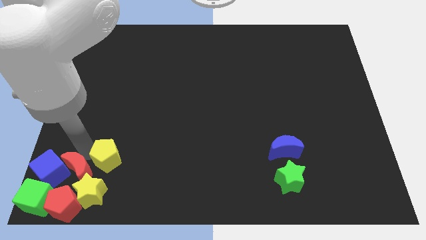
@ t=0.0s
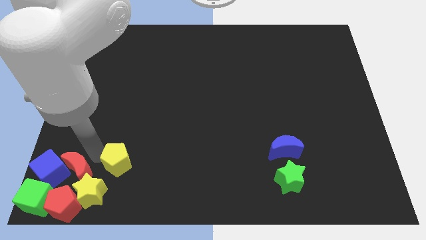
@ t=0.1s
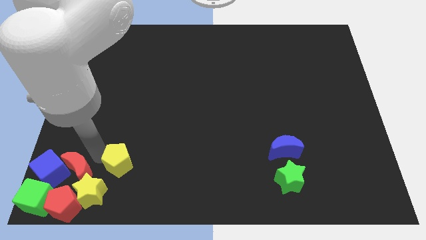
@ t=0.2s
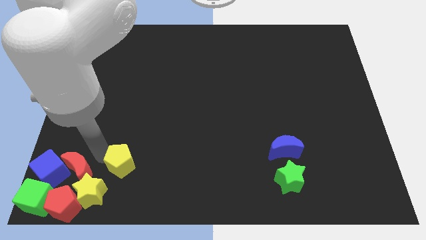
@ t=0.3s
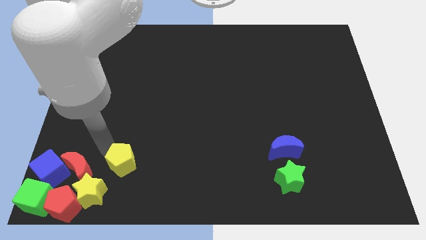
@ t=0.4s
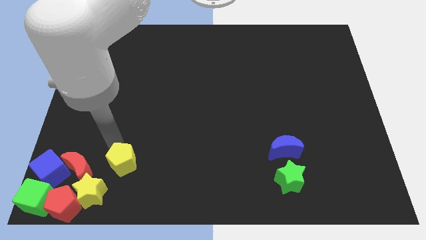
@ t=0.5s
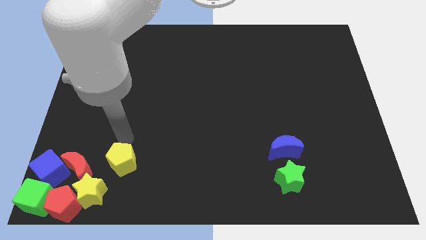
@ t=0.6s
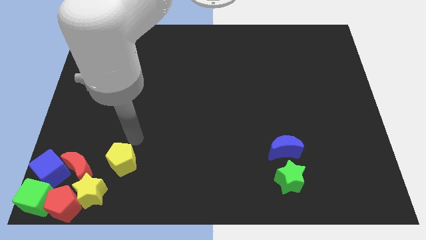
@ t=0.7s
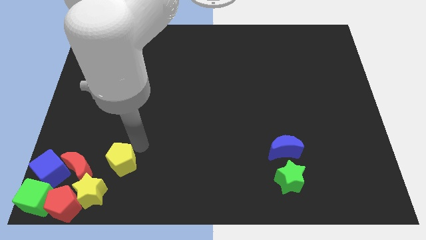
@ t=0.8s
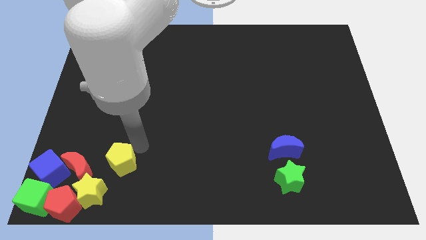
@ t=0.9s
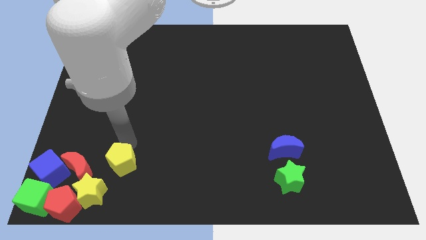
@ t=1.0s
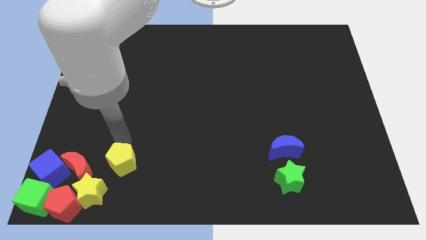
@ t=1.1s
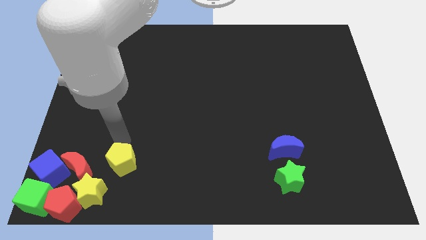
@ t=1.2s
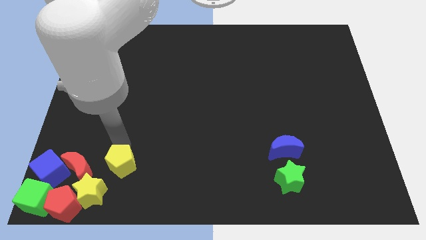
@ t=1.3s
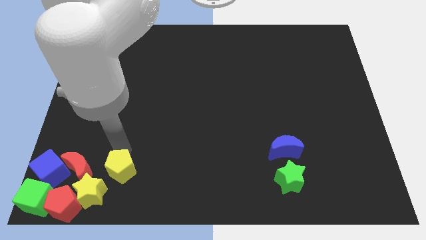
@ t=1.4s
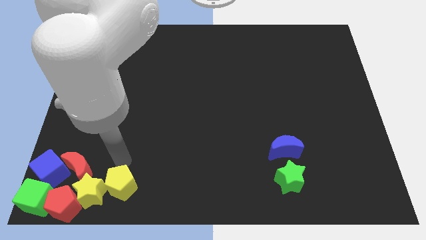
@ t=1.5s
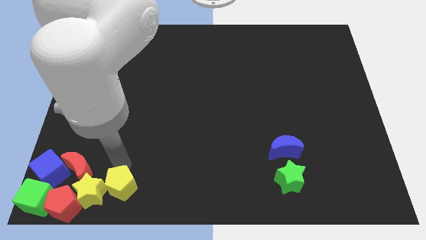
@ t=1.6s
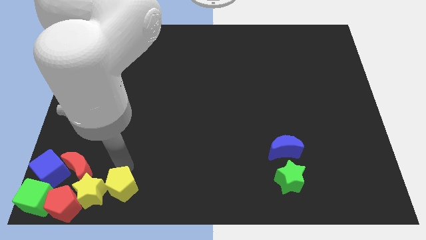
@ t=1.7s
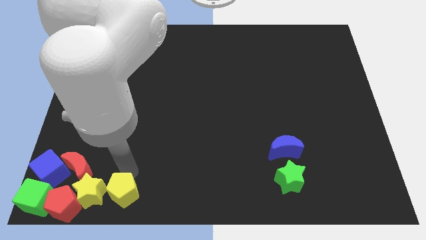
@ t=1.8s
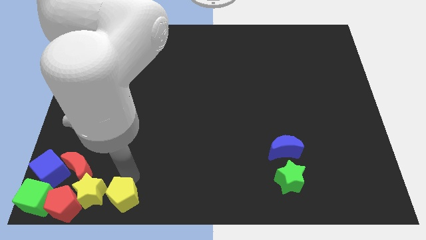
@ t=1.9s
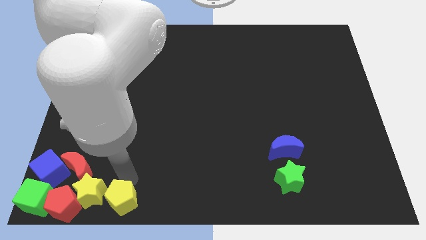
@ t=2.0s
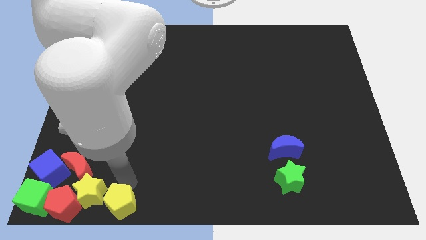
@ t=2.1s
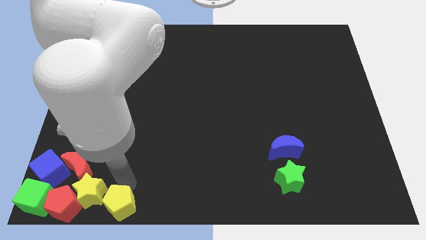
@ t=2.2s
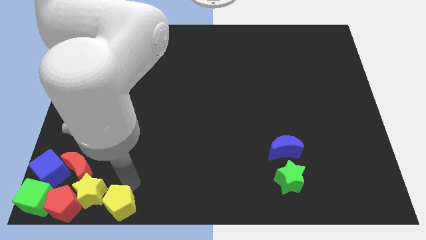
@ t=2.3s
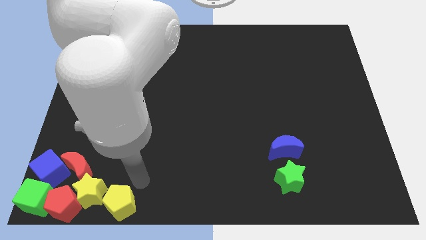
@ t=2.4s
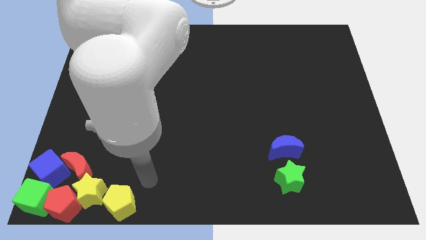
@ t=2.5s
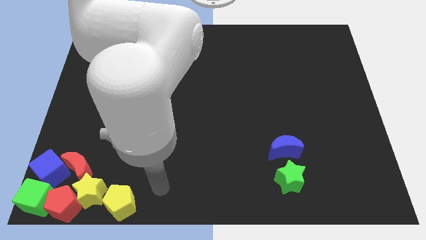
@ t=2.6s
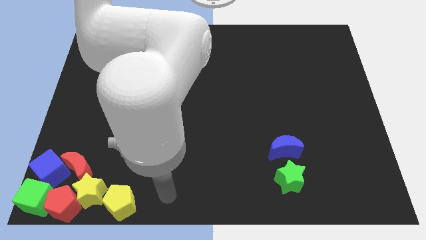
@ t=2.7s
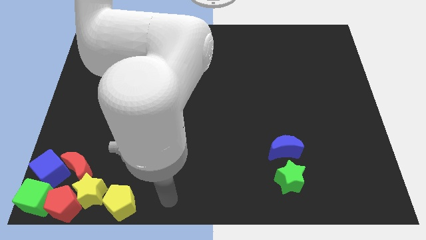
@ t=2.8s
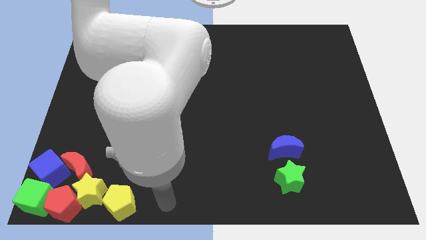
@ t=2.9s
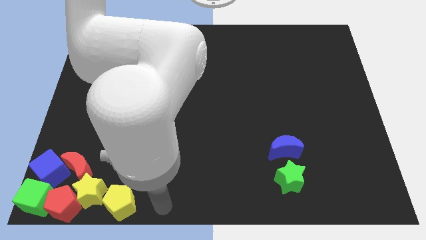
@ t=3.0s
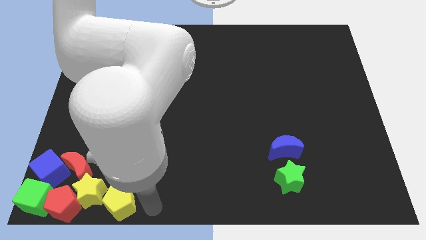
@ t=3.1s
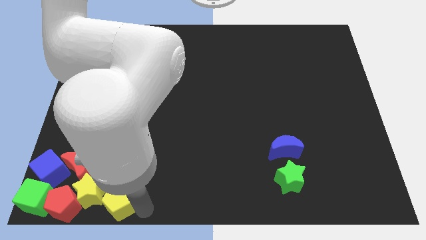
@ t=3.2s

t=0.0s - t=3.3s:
put the yellow pentagon right to the yellow star

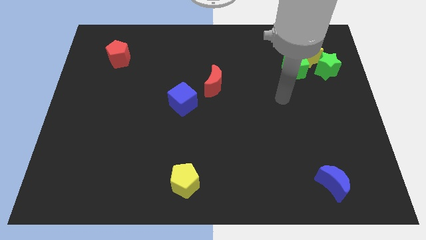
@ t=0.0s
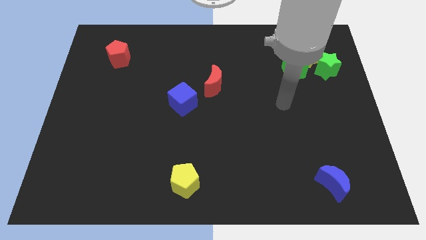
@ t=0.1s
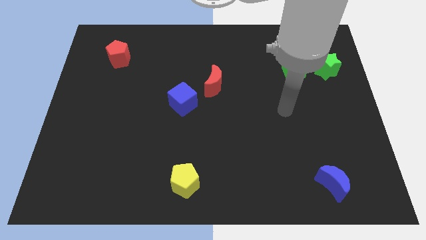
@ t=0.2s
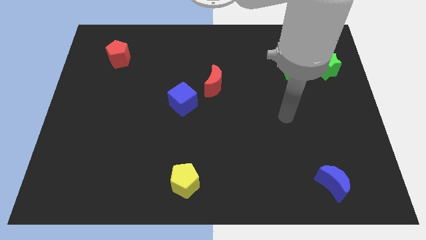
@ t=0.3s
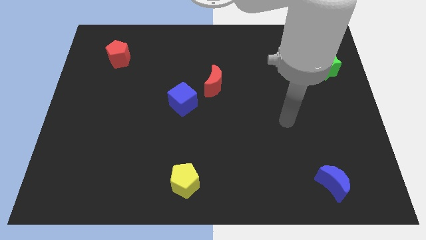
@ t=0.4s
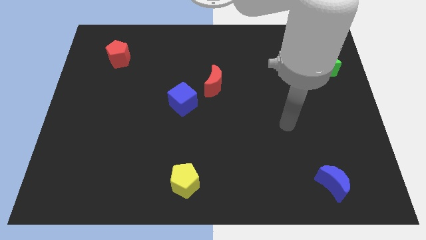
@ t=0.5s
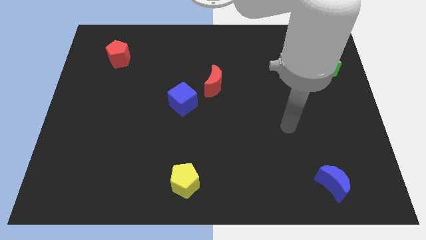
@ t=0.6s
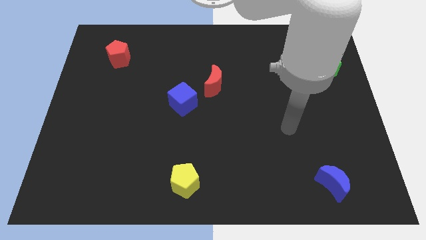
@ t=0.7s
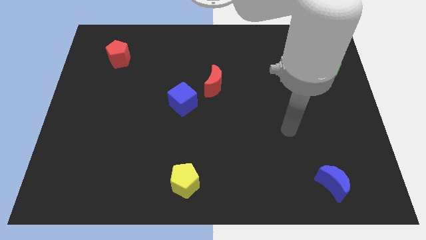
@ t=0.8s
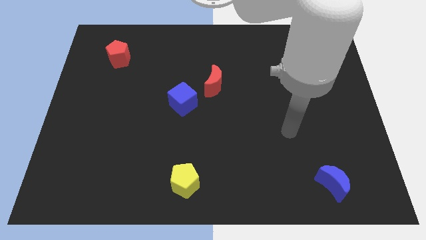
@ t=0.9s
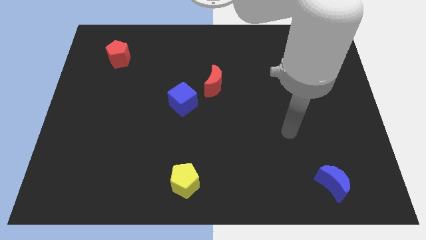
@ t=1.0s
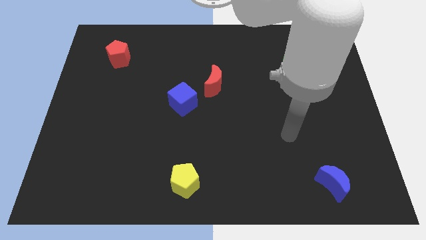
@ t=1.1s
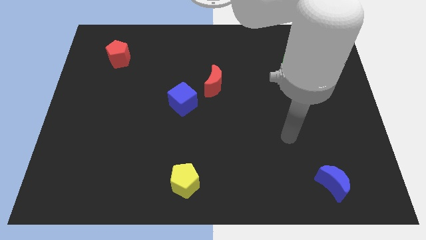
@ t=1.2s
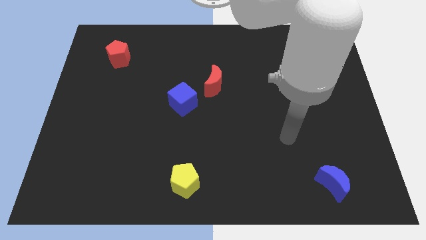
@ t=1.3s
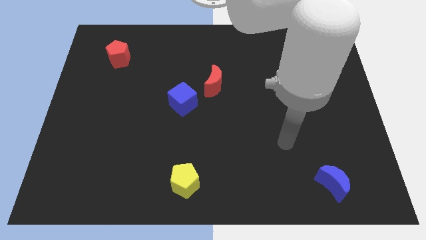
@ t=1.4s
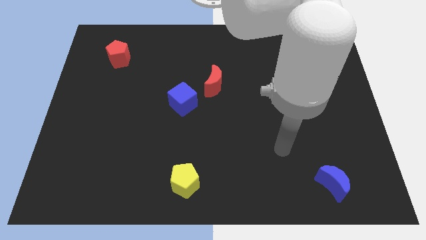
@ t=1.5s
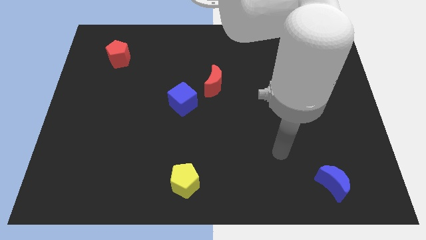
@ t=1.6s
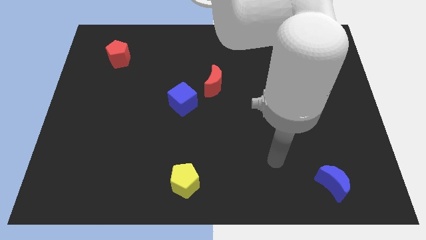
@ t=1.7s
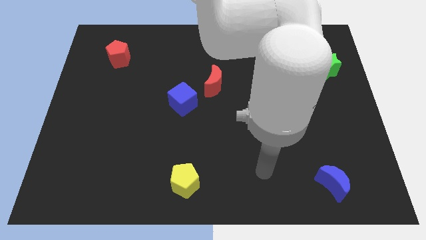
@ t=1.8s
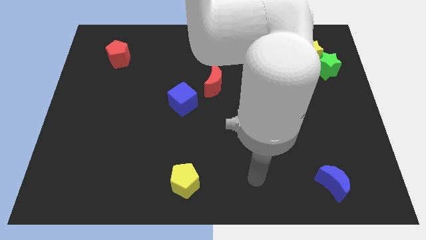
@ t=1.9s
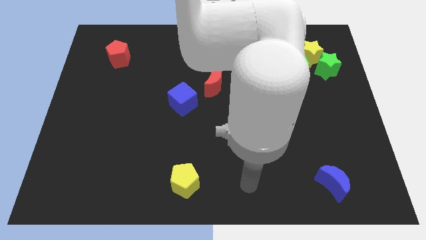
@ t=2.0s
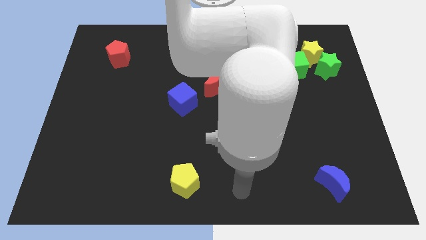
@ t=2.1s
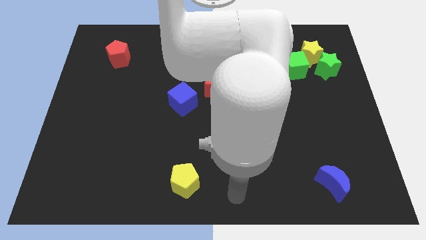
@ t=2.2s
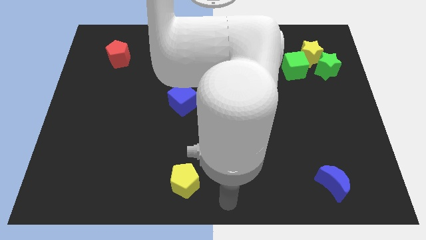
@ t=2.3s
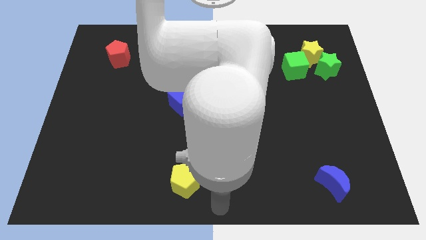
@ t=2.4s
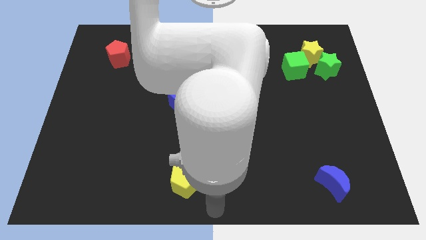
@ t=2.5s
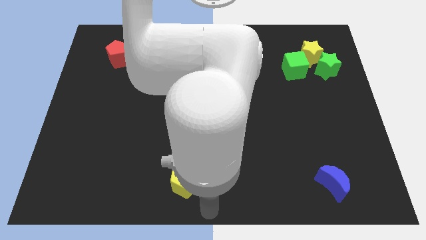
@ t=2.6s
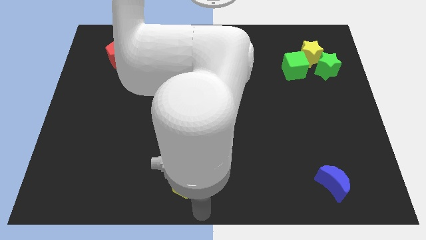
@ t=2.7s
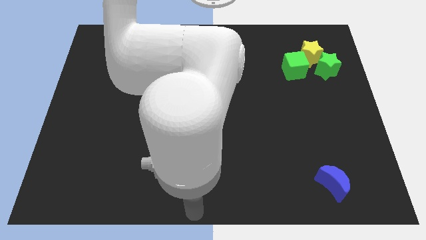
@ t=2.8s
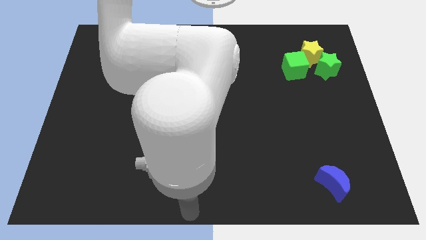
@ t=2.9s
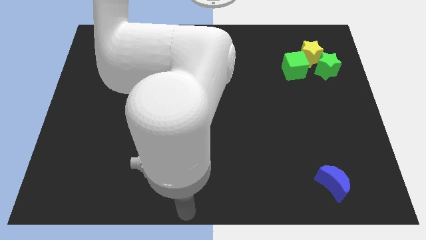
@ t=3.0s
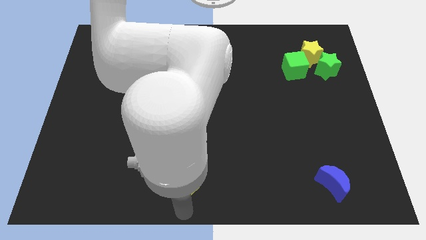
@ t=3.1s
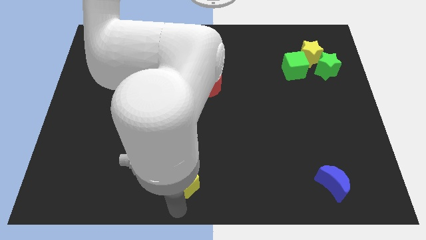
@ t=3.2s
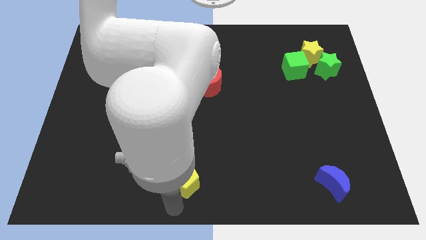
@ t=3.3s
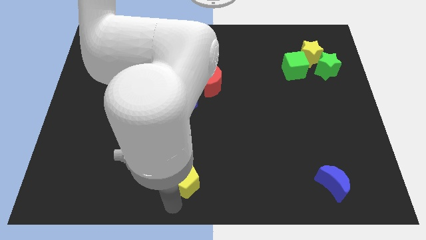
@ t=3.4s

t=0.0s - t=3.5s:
place arm at the bottom of yellow pentagon

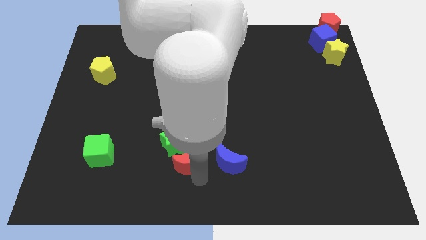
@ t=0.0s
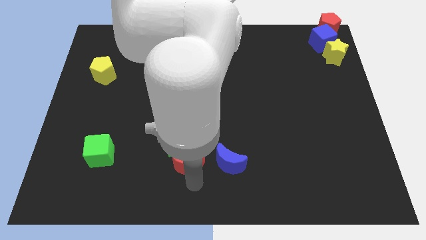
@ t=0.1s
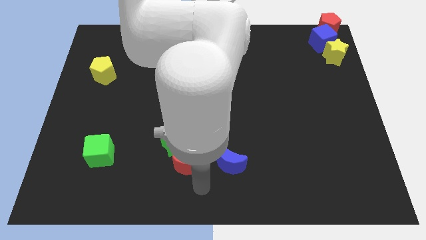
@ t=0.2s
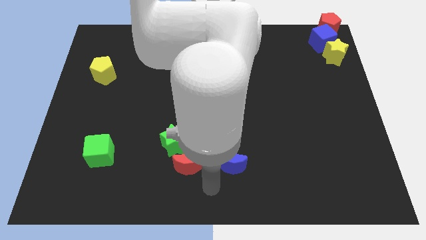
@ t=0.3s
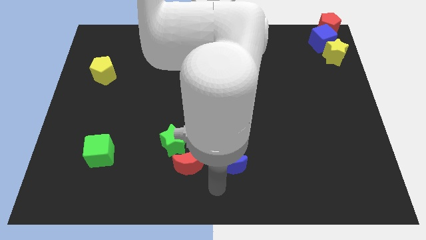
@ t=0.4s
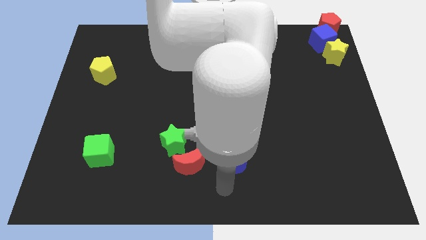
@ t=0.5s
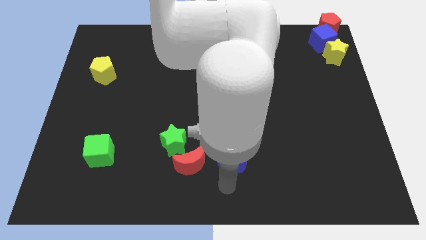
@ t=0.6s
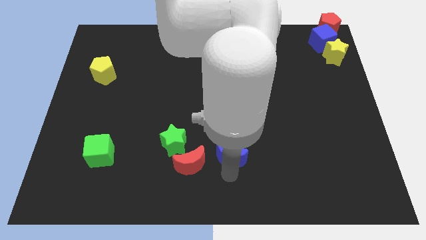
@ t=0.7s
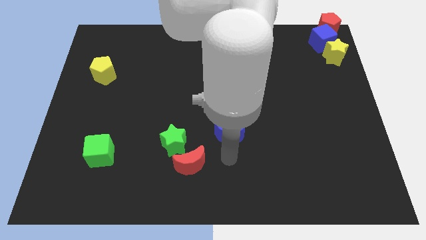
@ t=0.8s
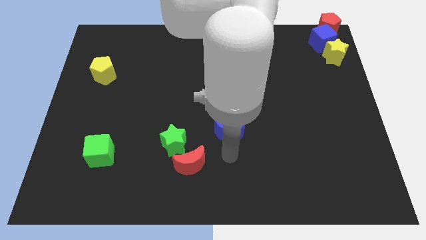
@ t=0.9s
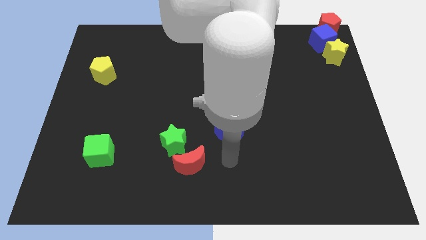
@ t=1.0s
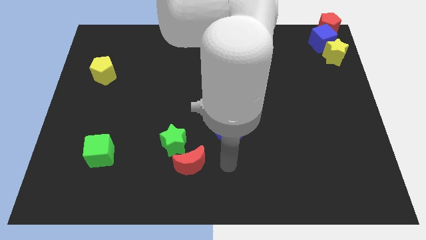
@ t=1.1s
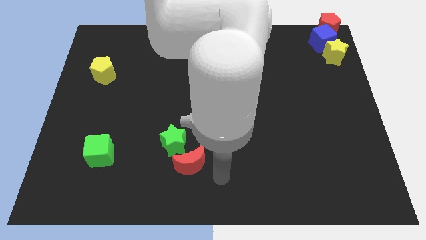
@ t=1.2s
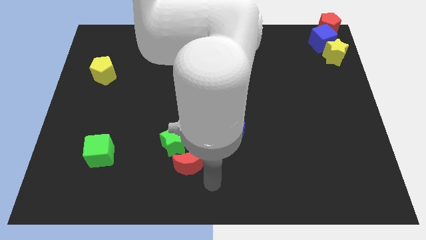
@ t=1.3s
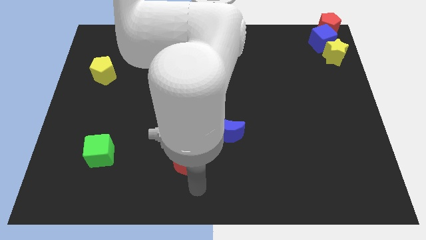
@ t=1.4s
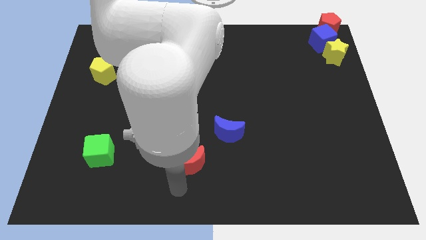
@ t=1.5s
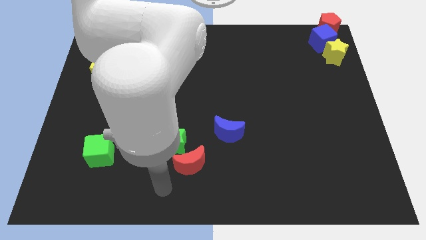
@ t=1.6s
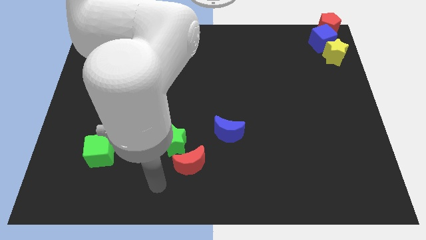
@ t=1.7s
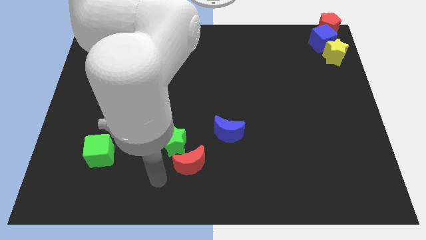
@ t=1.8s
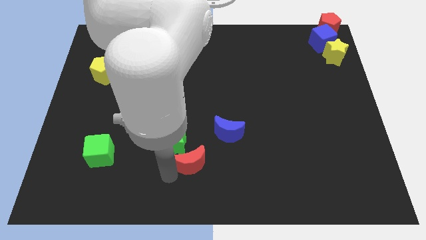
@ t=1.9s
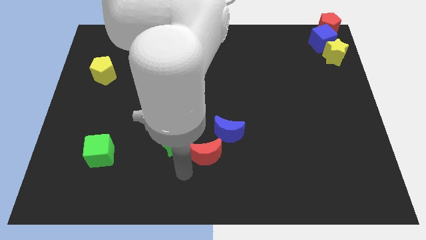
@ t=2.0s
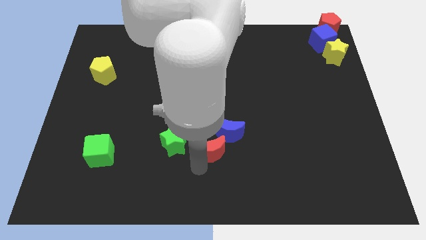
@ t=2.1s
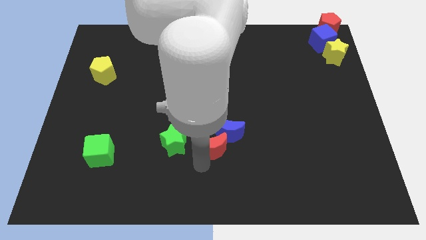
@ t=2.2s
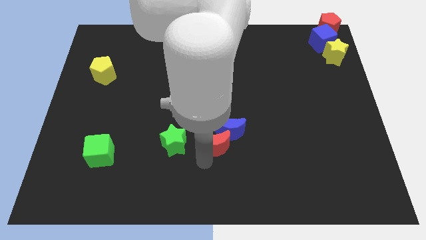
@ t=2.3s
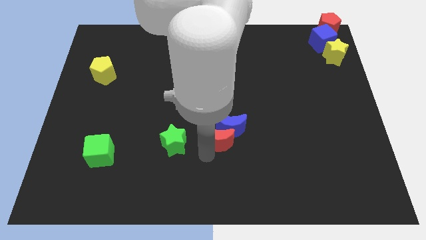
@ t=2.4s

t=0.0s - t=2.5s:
move the blue and red crescents to the right of the green star
